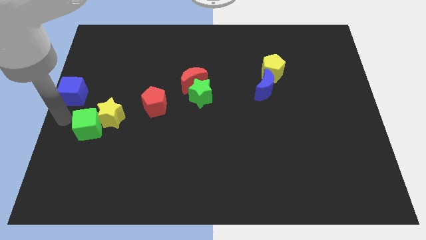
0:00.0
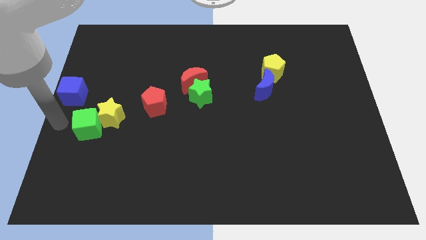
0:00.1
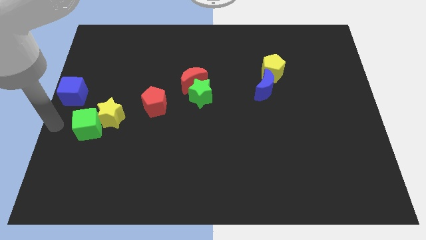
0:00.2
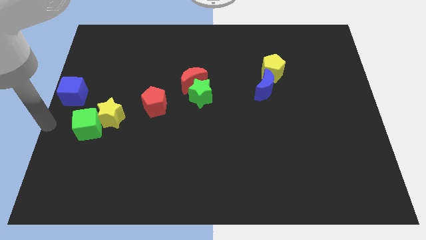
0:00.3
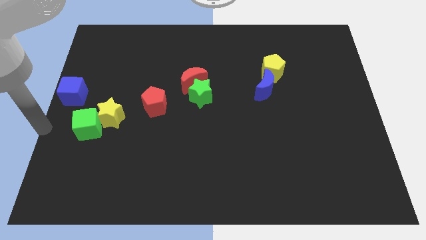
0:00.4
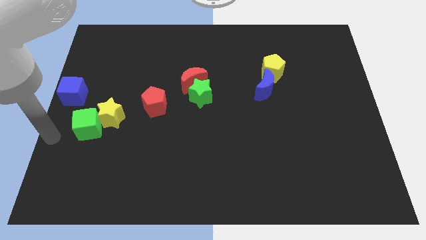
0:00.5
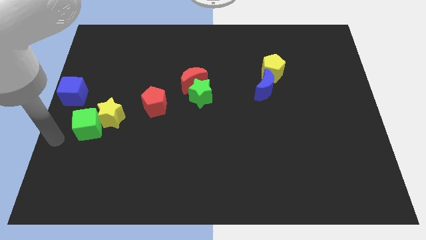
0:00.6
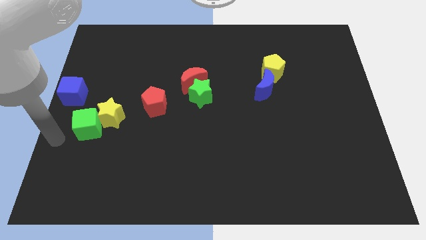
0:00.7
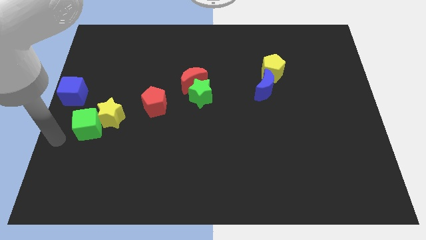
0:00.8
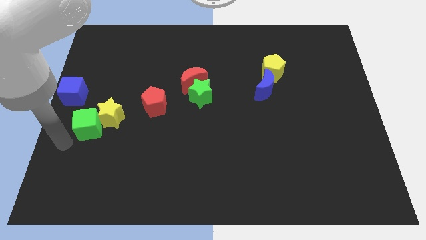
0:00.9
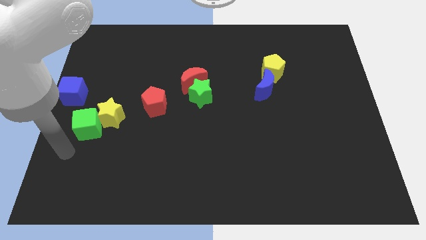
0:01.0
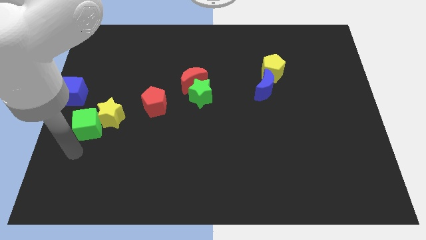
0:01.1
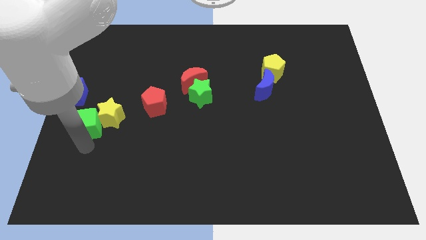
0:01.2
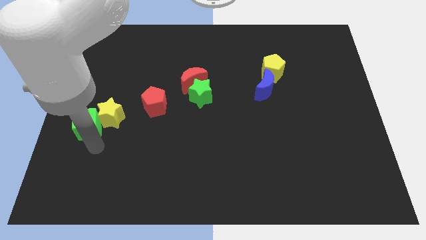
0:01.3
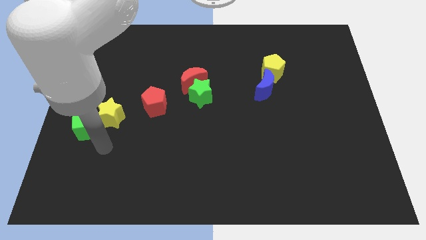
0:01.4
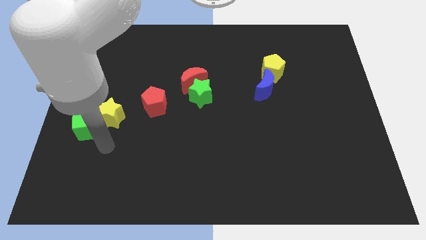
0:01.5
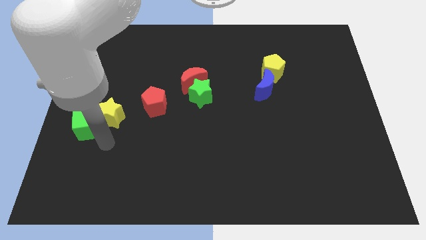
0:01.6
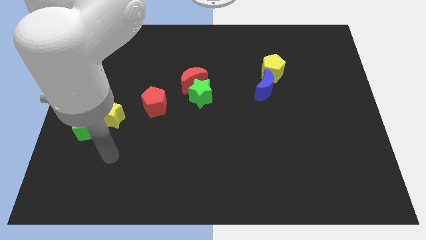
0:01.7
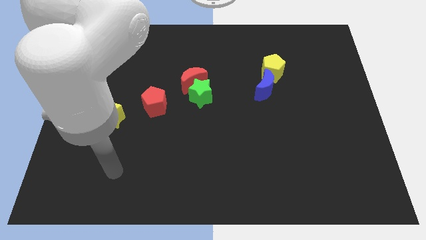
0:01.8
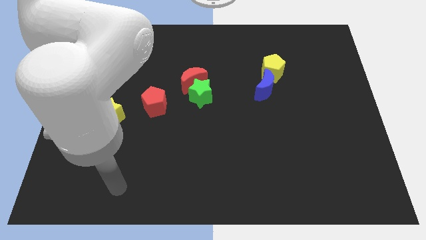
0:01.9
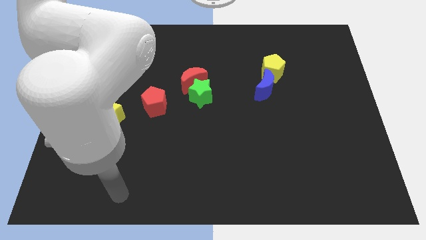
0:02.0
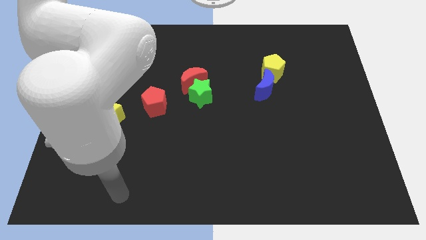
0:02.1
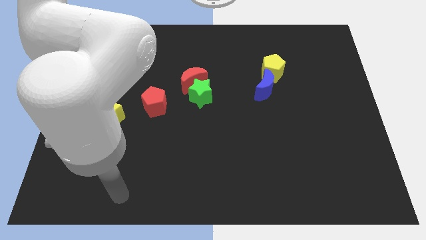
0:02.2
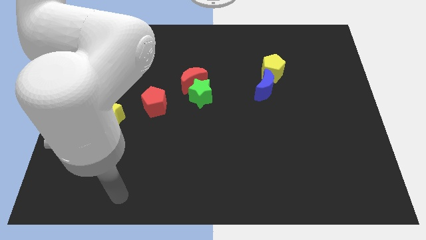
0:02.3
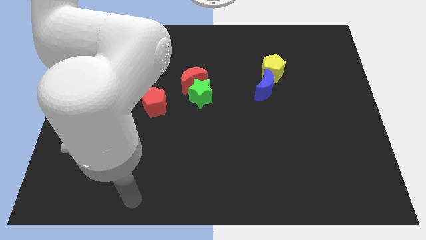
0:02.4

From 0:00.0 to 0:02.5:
move your hand towards the bottom side

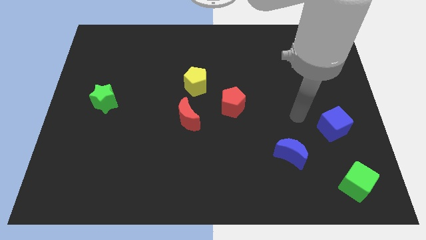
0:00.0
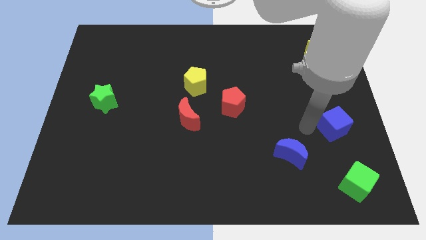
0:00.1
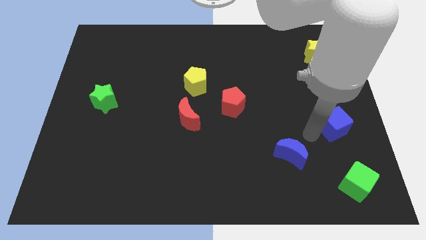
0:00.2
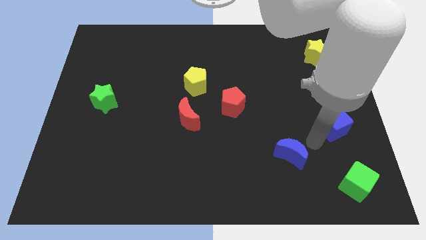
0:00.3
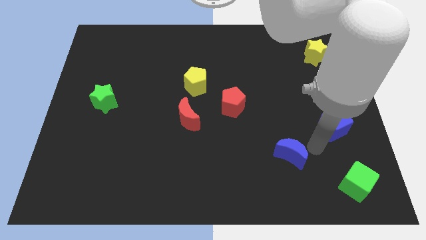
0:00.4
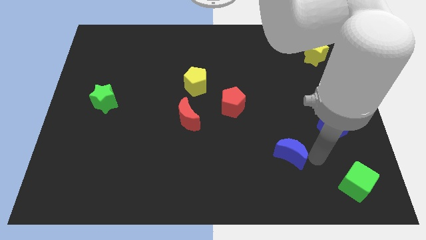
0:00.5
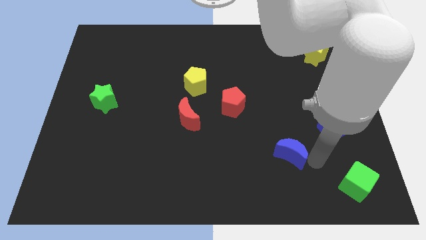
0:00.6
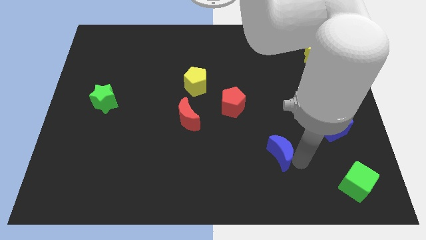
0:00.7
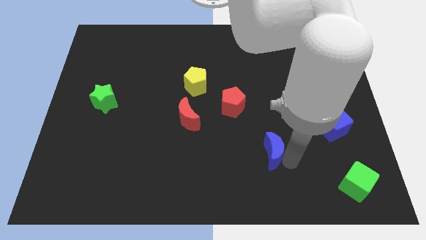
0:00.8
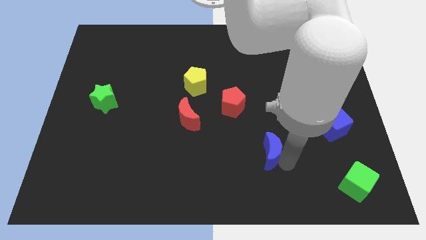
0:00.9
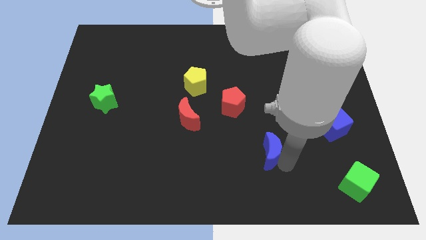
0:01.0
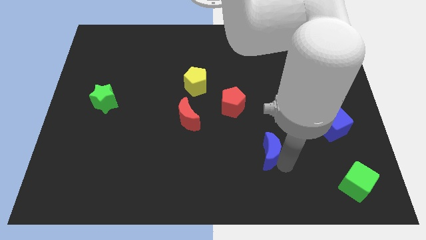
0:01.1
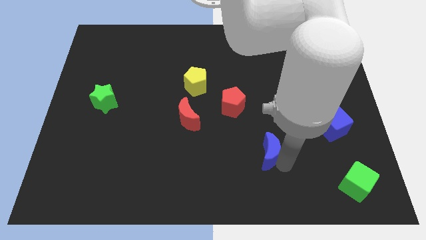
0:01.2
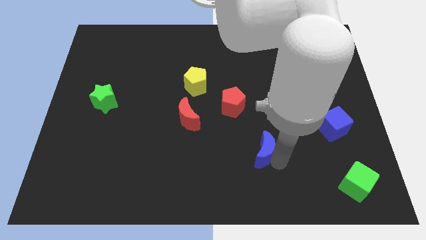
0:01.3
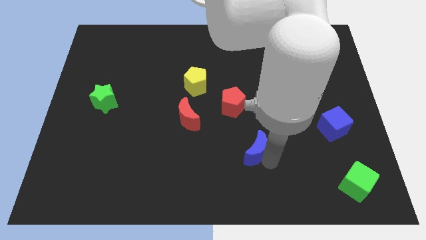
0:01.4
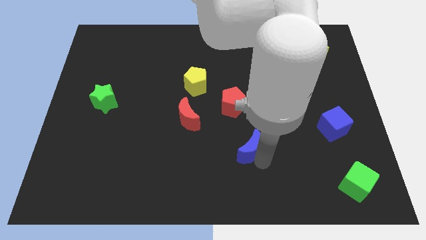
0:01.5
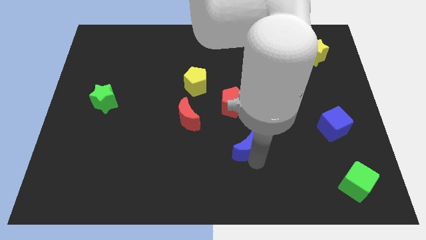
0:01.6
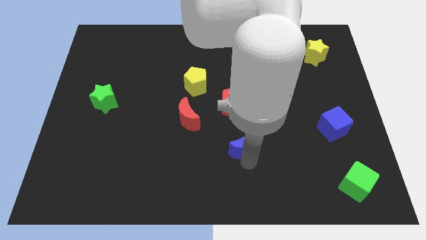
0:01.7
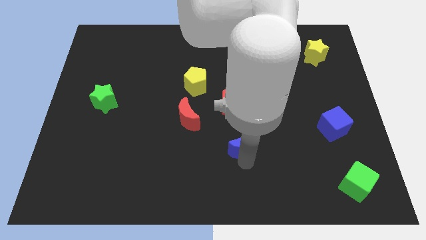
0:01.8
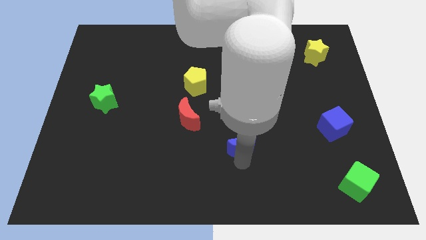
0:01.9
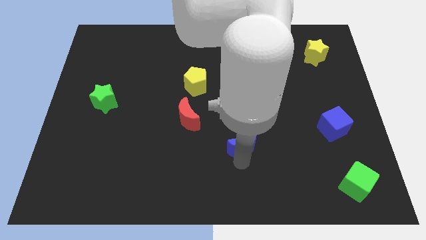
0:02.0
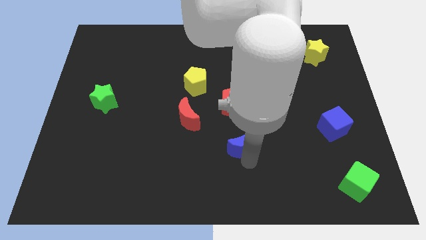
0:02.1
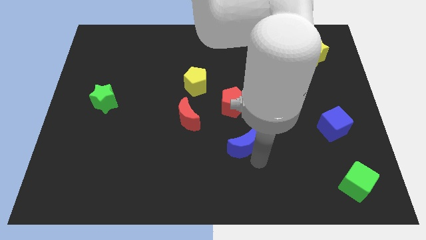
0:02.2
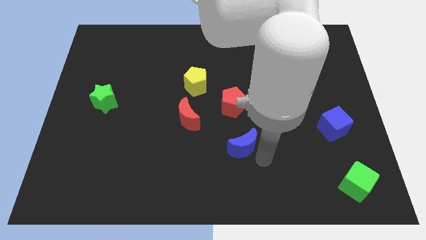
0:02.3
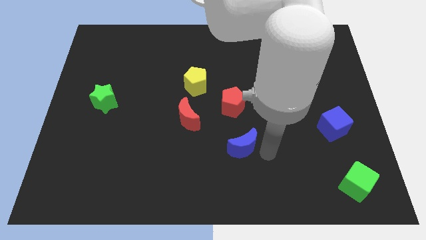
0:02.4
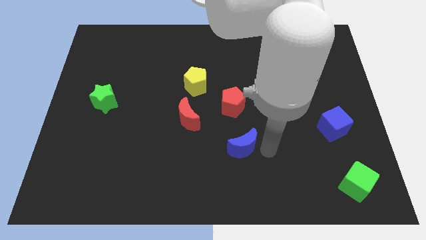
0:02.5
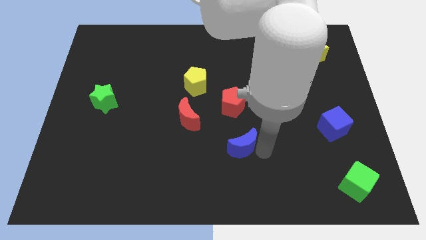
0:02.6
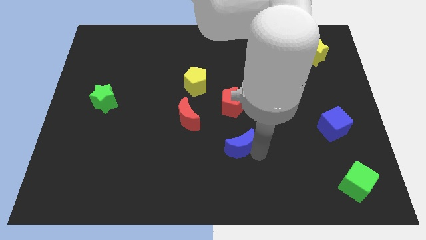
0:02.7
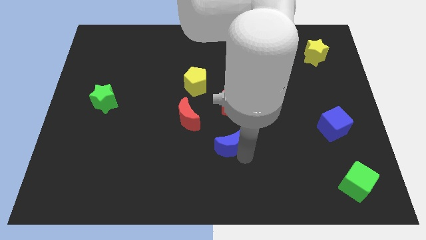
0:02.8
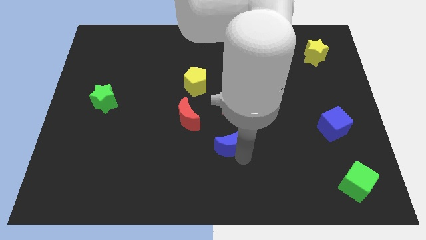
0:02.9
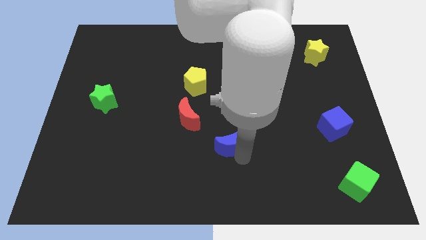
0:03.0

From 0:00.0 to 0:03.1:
move the blue moon below the red pentagon

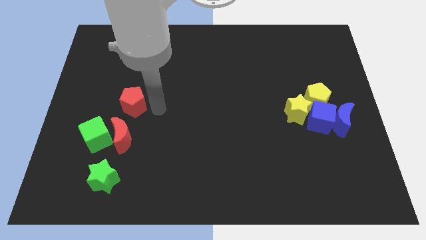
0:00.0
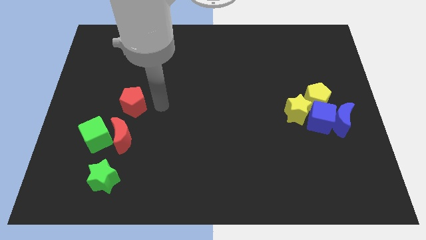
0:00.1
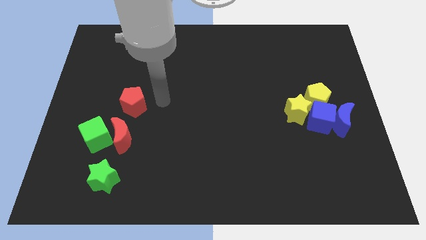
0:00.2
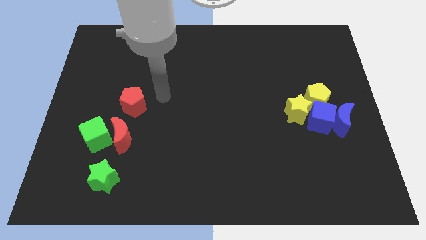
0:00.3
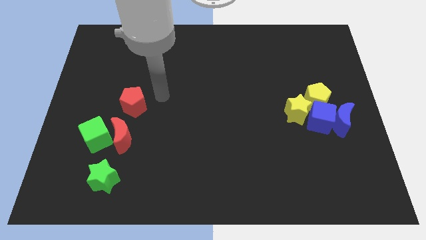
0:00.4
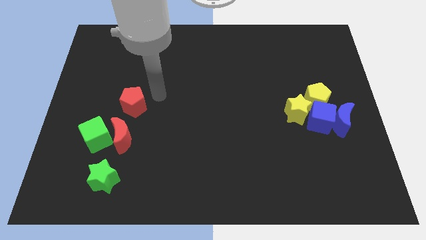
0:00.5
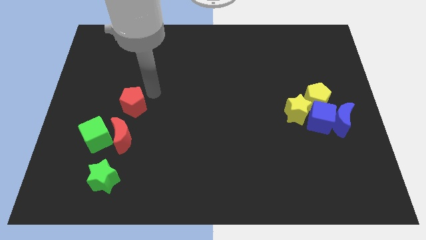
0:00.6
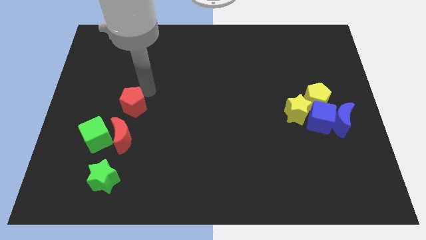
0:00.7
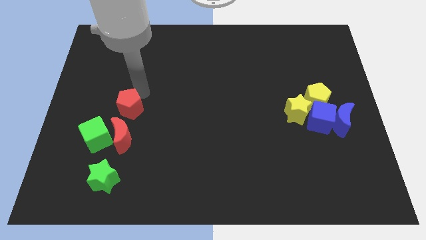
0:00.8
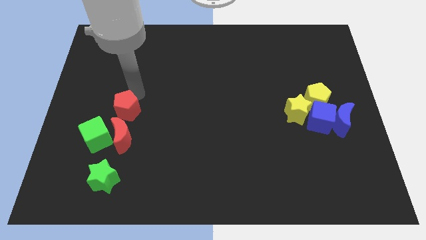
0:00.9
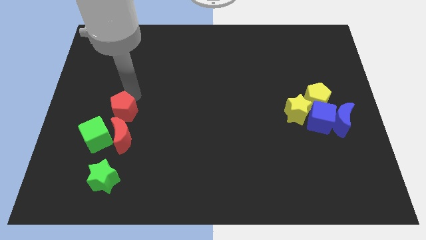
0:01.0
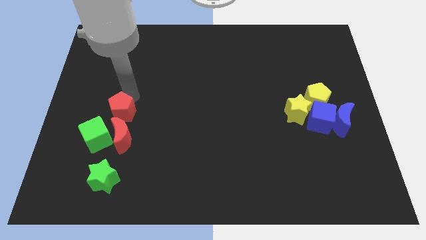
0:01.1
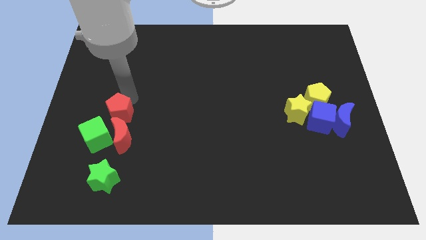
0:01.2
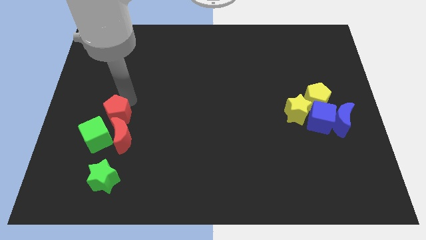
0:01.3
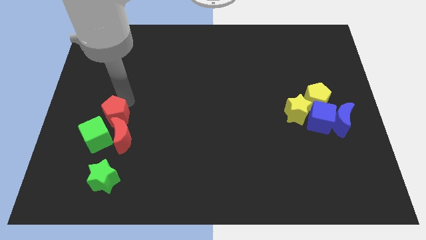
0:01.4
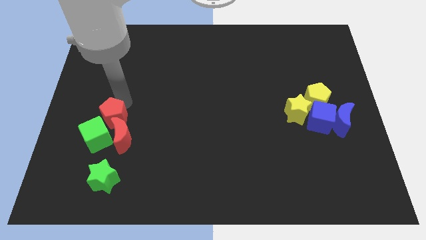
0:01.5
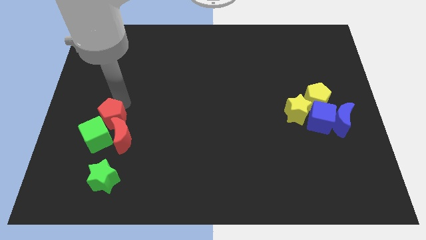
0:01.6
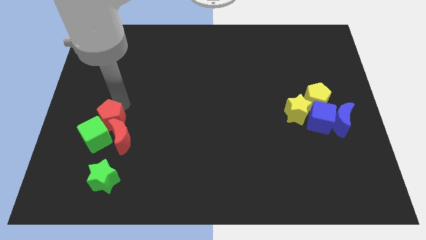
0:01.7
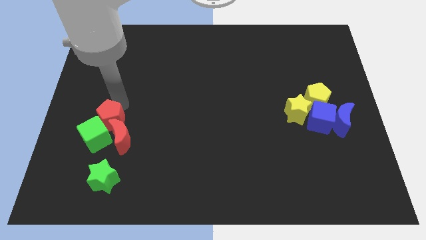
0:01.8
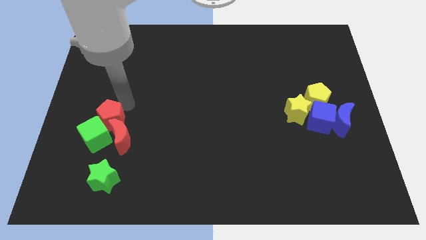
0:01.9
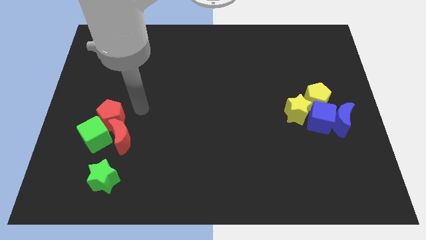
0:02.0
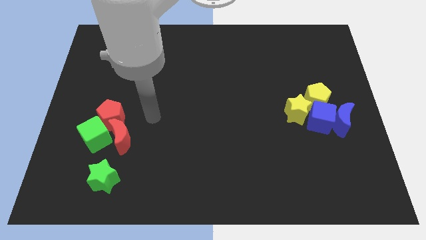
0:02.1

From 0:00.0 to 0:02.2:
move the red pentagon to the top right side of the green cube

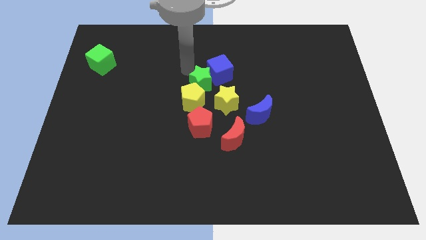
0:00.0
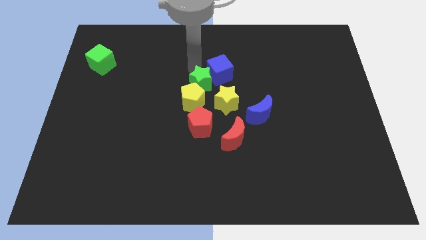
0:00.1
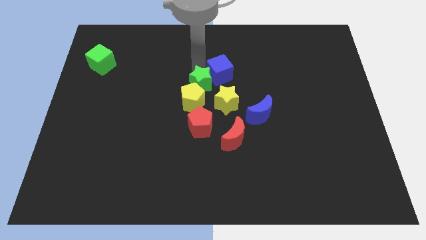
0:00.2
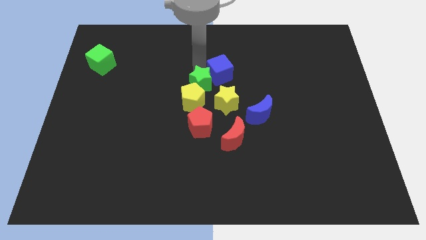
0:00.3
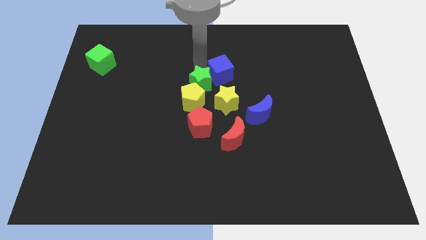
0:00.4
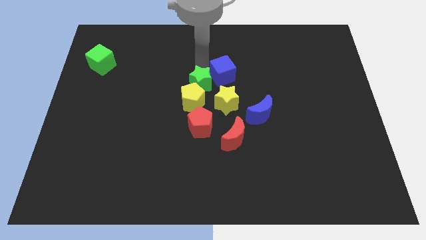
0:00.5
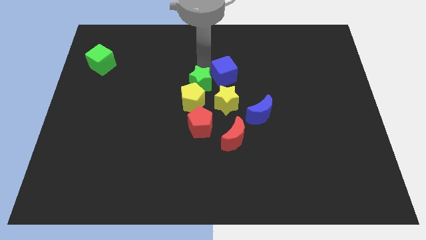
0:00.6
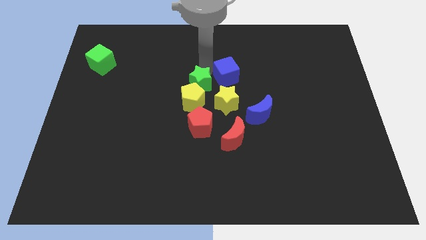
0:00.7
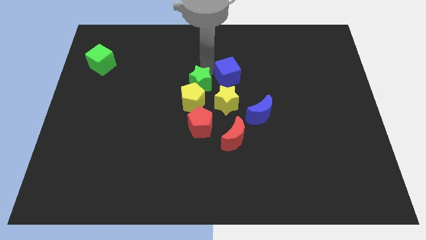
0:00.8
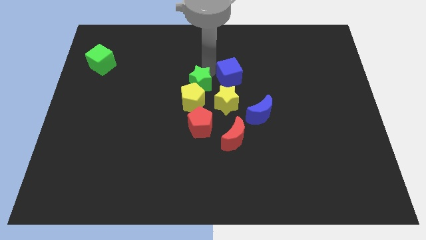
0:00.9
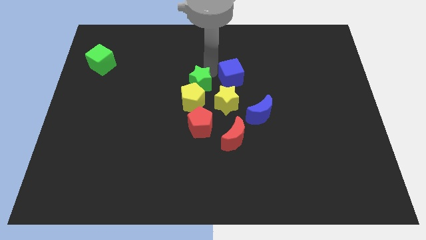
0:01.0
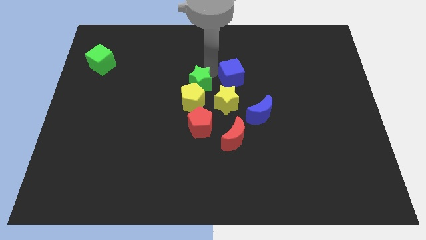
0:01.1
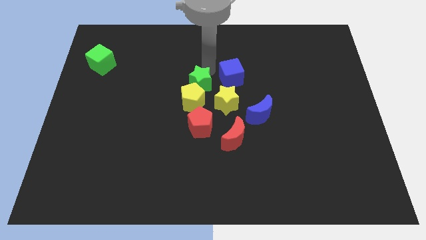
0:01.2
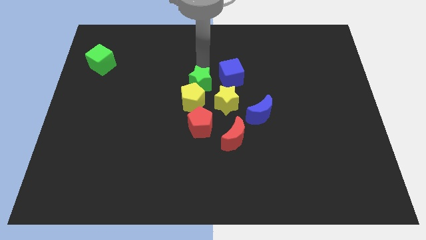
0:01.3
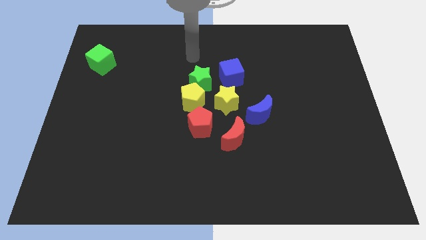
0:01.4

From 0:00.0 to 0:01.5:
slightly push the blue cube to the right of the board
